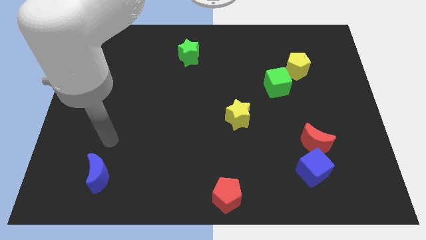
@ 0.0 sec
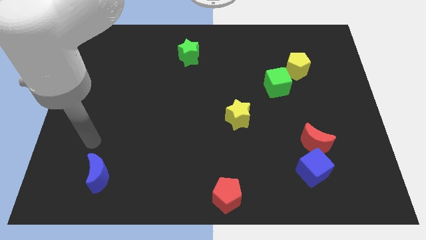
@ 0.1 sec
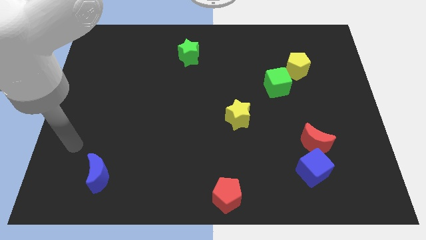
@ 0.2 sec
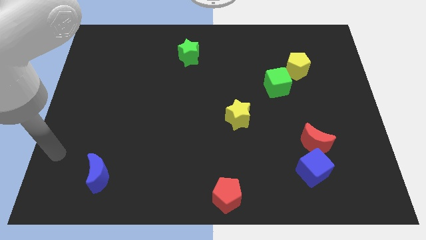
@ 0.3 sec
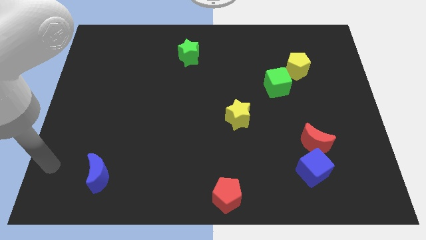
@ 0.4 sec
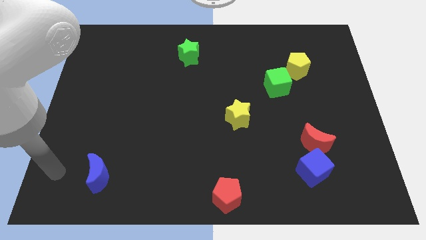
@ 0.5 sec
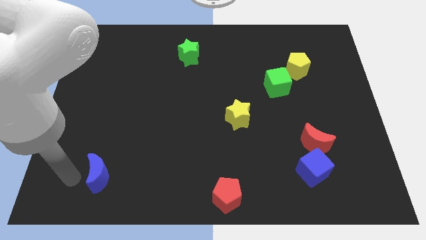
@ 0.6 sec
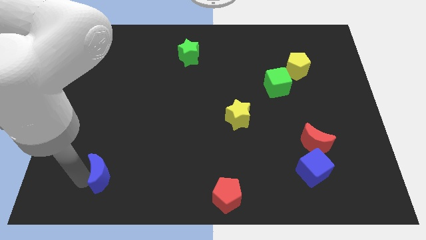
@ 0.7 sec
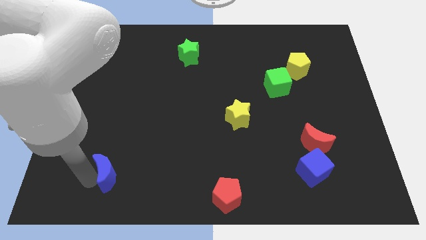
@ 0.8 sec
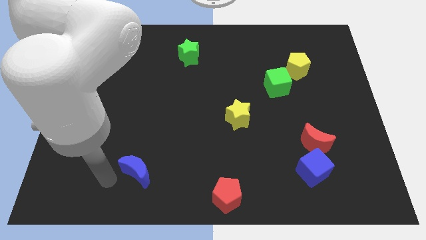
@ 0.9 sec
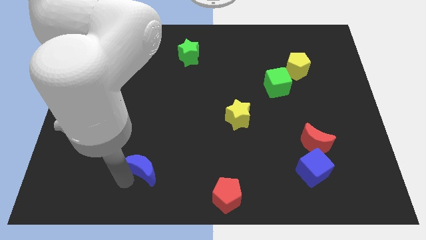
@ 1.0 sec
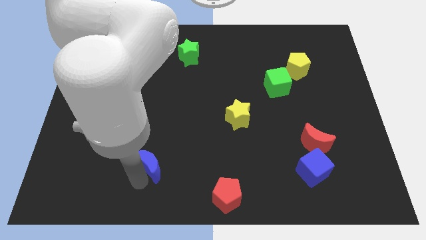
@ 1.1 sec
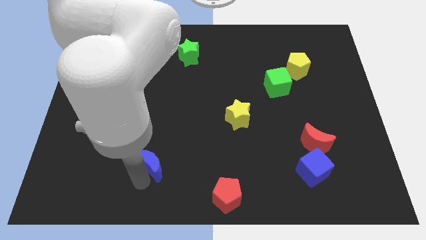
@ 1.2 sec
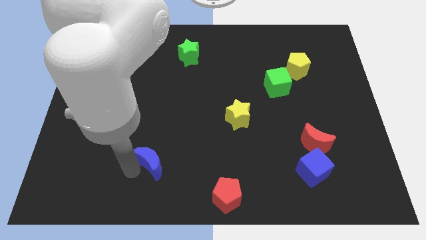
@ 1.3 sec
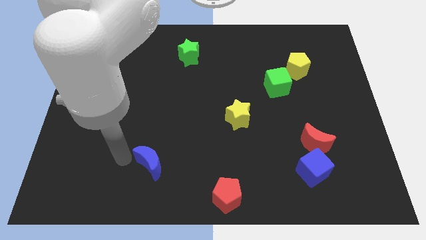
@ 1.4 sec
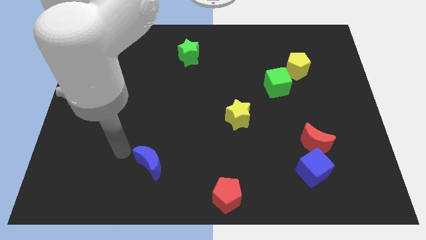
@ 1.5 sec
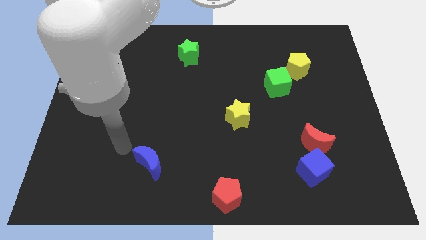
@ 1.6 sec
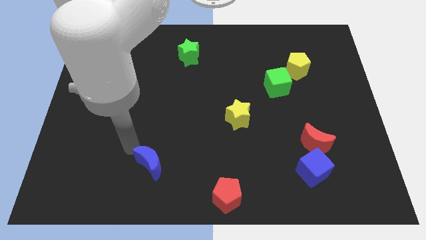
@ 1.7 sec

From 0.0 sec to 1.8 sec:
push the blue crescent towards the bottom left of the yellow star

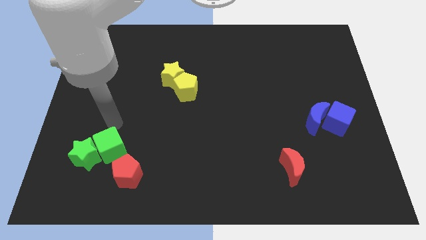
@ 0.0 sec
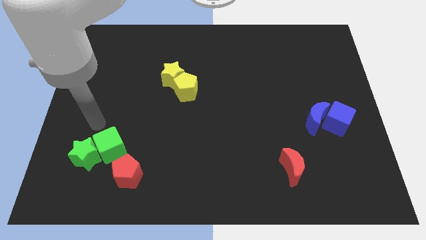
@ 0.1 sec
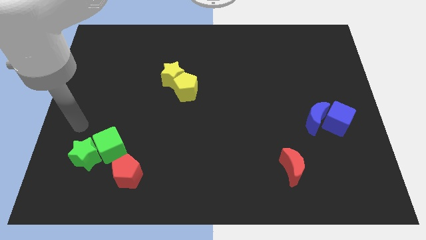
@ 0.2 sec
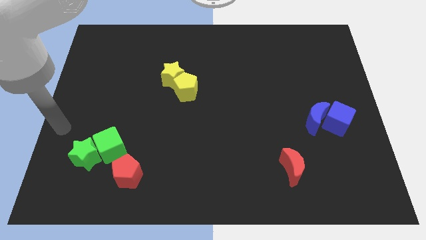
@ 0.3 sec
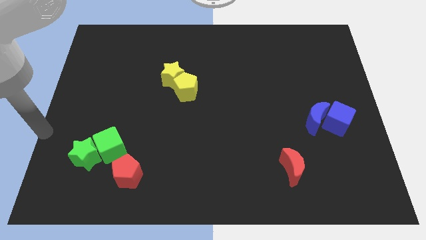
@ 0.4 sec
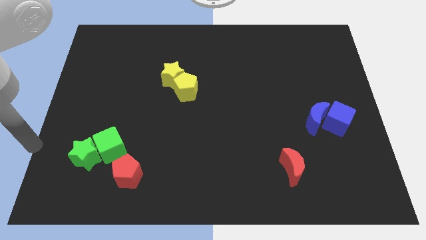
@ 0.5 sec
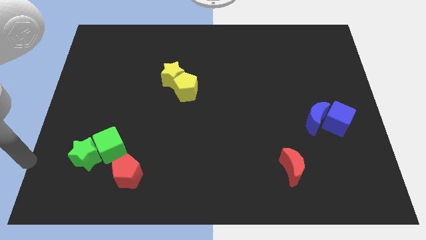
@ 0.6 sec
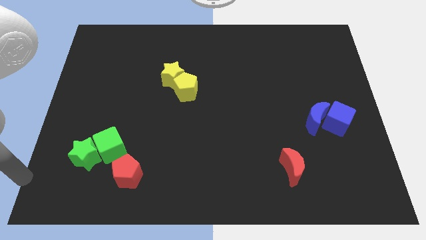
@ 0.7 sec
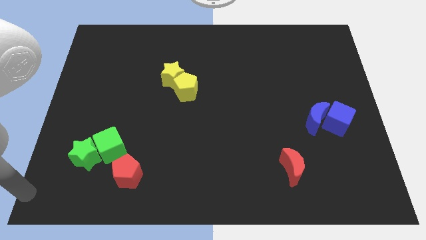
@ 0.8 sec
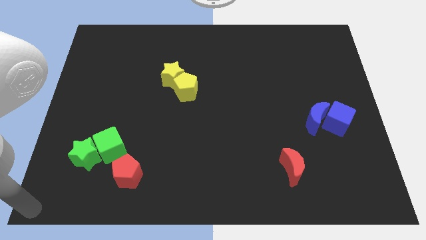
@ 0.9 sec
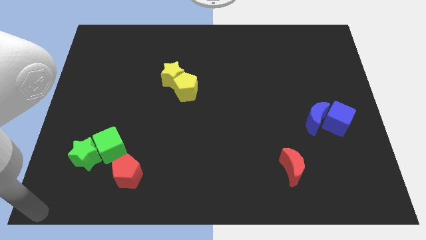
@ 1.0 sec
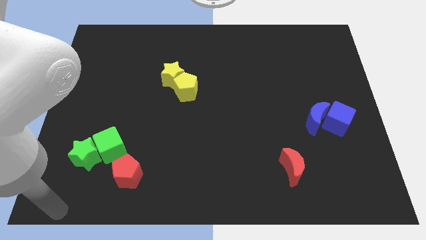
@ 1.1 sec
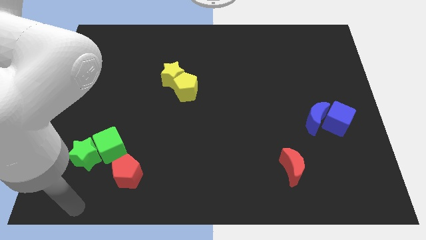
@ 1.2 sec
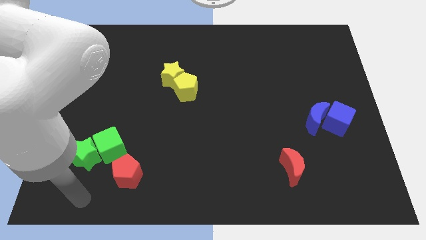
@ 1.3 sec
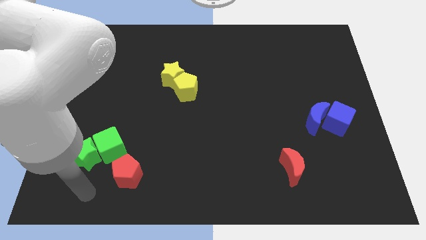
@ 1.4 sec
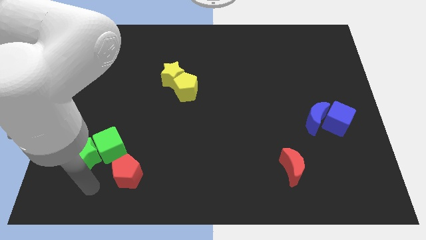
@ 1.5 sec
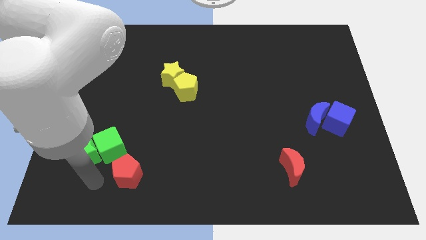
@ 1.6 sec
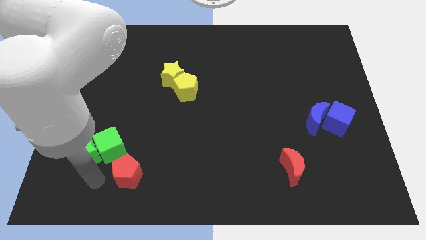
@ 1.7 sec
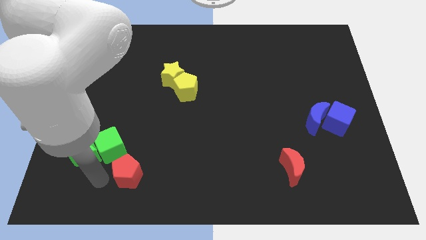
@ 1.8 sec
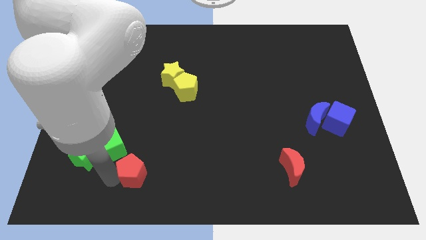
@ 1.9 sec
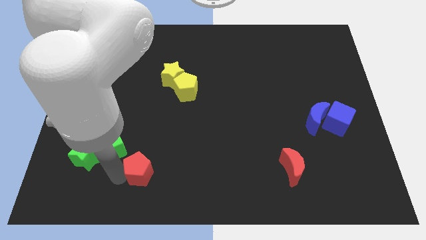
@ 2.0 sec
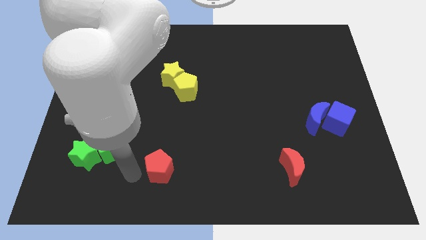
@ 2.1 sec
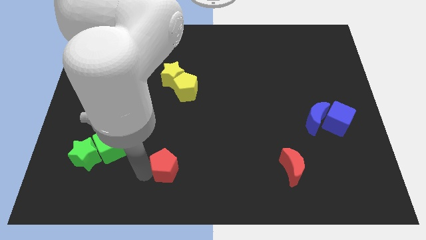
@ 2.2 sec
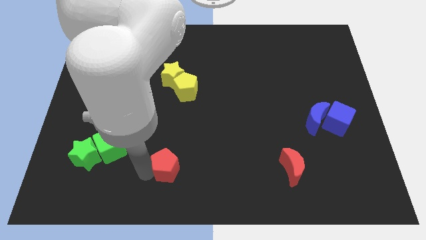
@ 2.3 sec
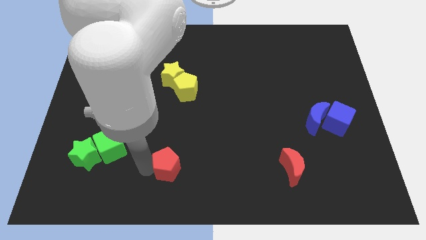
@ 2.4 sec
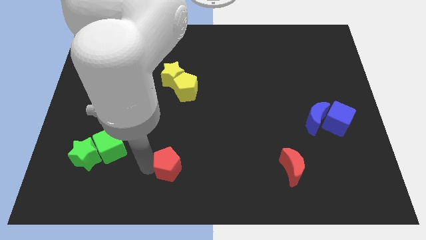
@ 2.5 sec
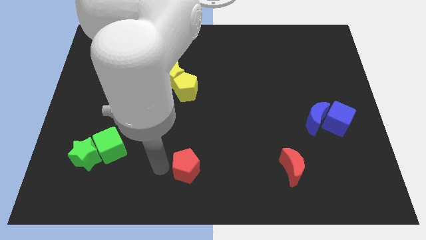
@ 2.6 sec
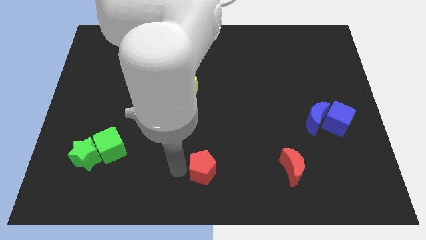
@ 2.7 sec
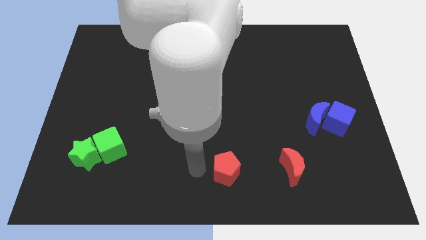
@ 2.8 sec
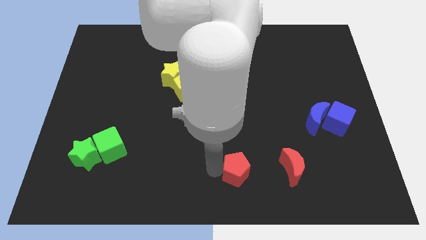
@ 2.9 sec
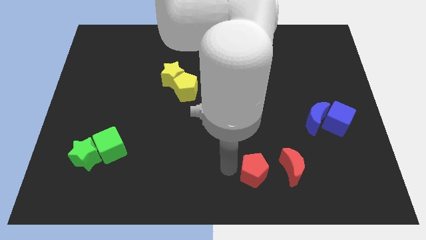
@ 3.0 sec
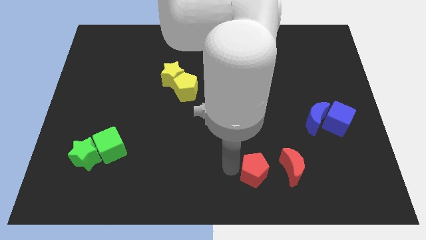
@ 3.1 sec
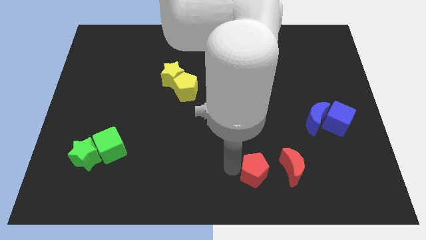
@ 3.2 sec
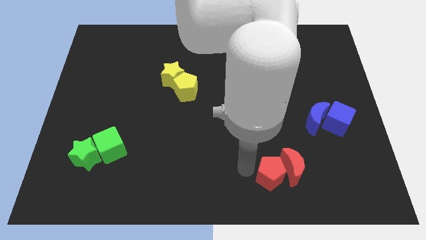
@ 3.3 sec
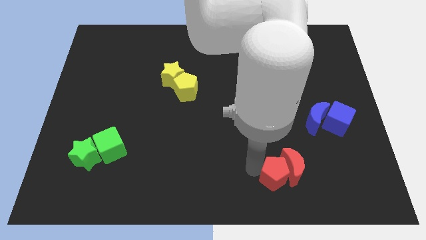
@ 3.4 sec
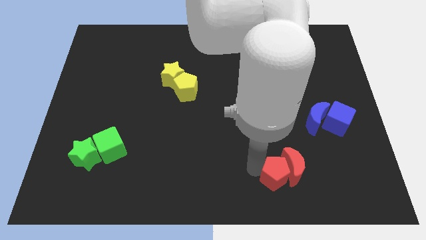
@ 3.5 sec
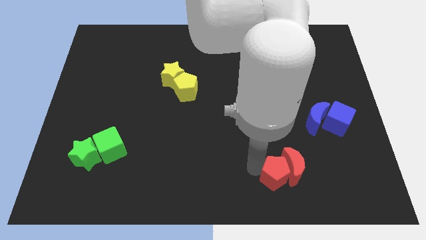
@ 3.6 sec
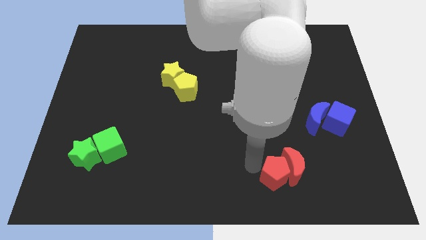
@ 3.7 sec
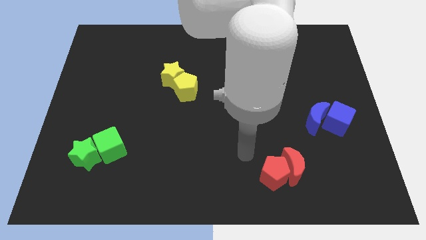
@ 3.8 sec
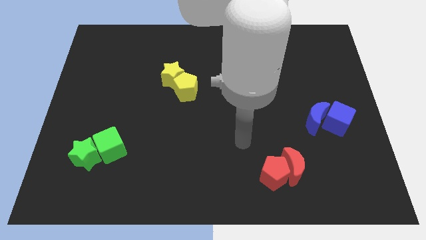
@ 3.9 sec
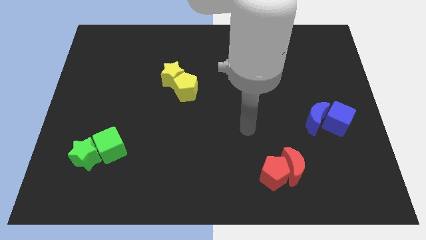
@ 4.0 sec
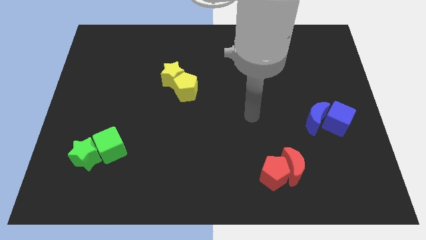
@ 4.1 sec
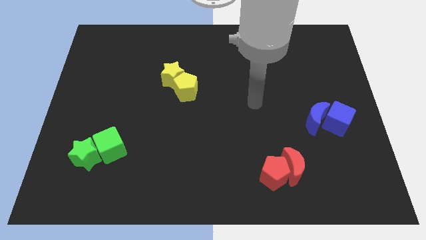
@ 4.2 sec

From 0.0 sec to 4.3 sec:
move the red pentagon to the left side of the red crescent

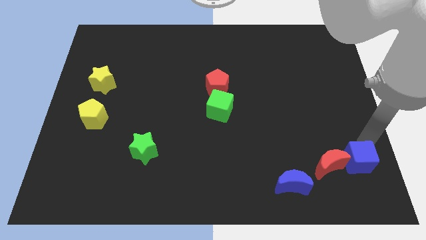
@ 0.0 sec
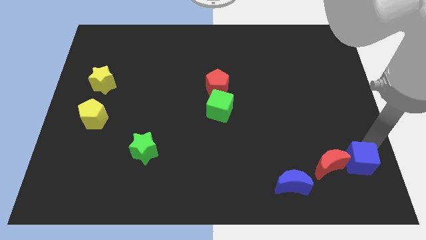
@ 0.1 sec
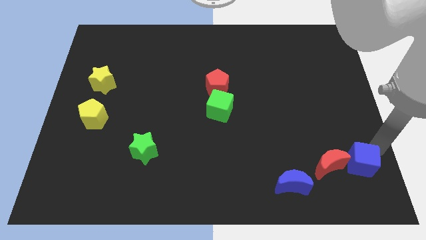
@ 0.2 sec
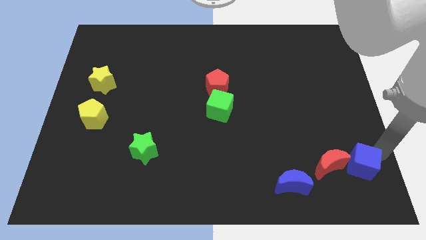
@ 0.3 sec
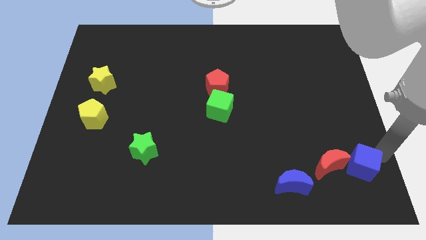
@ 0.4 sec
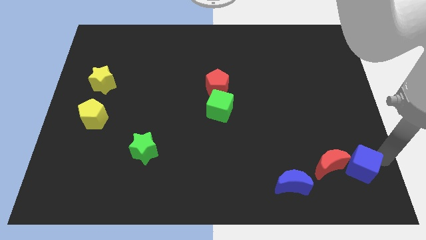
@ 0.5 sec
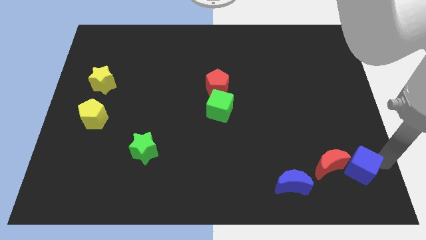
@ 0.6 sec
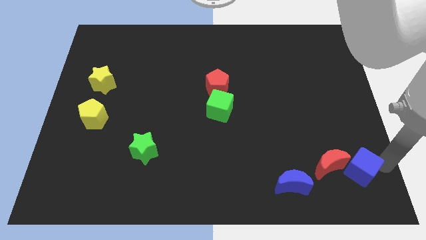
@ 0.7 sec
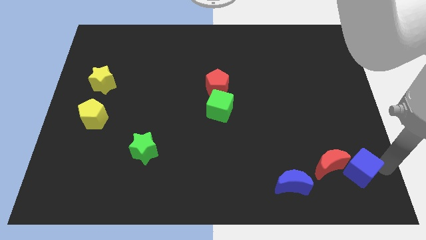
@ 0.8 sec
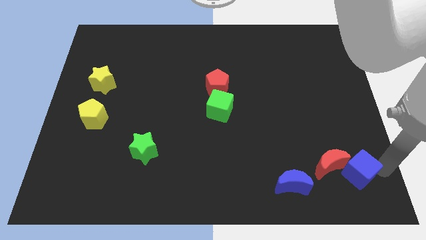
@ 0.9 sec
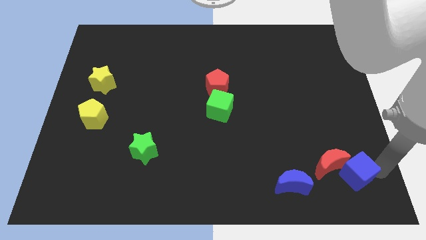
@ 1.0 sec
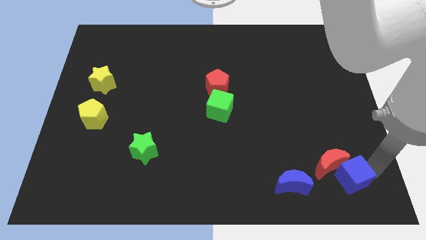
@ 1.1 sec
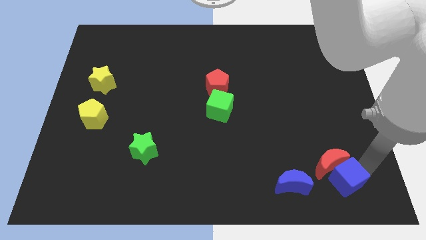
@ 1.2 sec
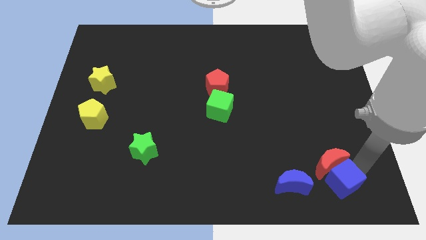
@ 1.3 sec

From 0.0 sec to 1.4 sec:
slide the blue cube into the bottom right side of the red moon

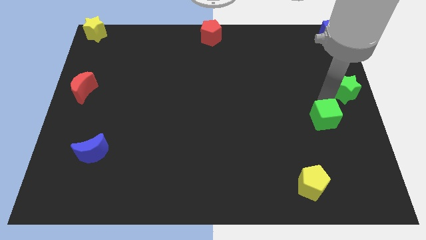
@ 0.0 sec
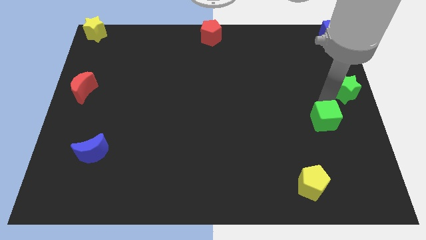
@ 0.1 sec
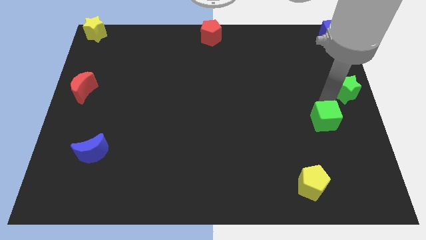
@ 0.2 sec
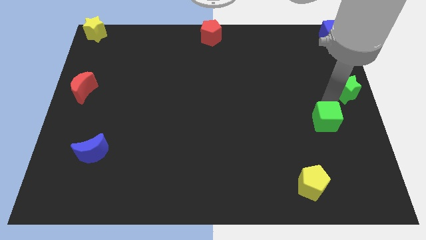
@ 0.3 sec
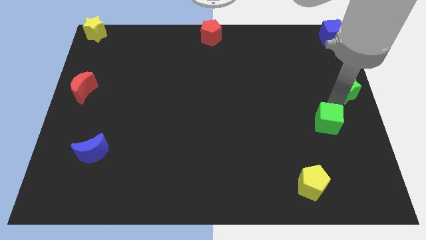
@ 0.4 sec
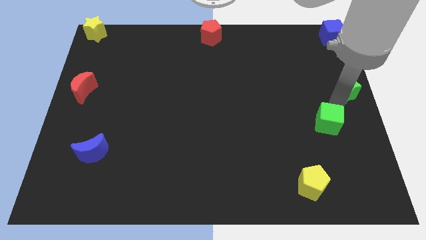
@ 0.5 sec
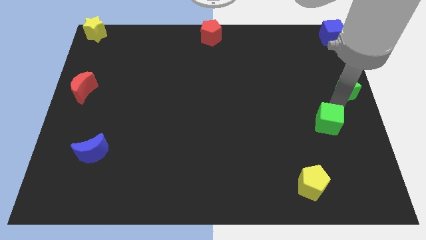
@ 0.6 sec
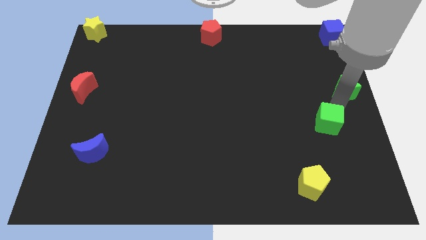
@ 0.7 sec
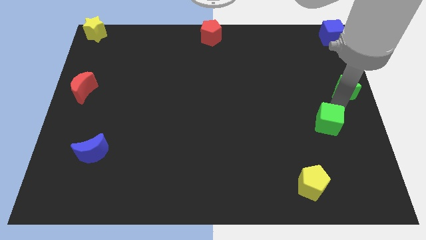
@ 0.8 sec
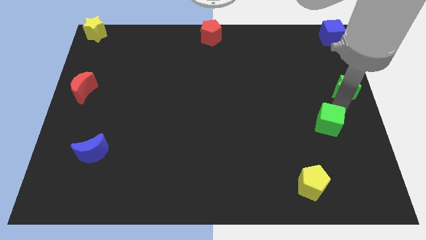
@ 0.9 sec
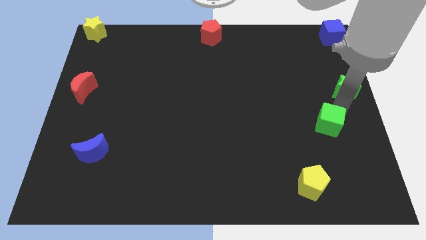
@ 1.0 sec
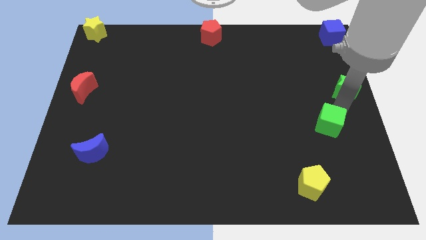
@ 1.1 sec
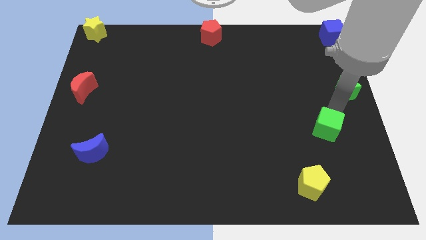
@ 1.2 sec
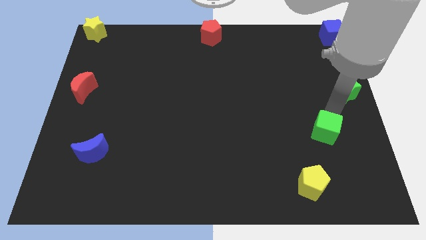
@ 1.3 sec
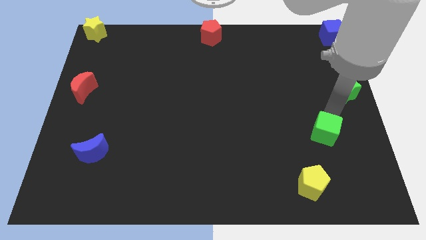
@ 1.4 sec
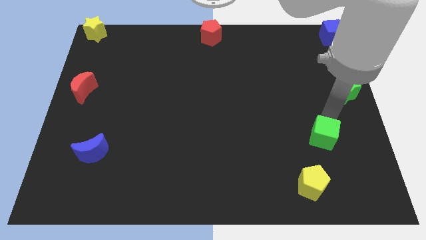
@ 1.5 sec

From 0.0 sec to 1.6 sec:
push the green cube away from the green star
